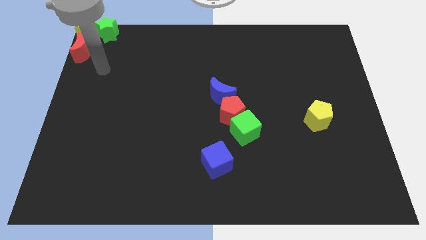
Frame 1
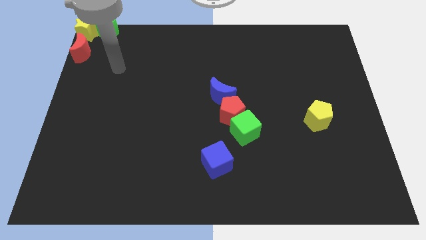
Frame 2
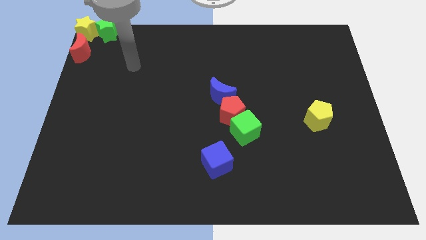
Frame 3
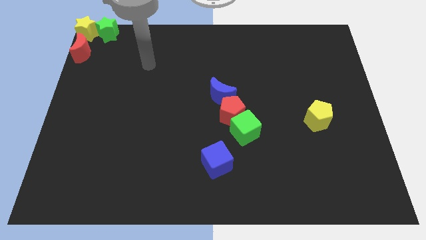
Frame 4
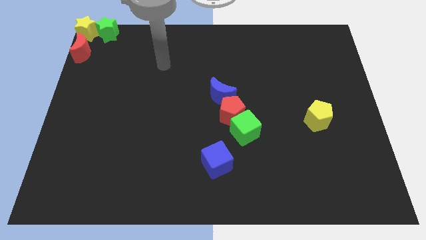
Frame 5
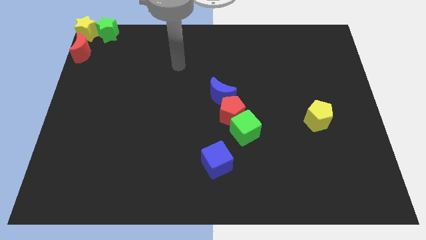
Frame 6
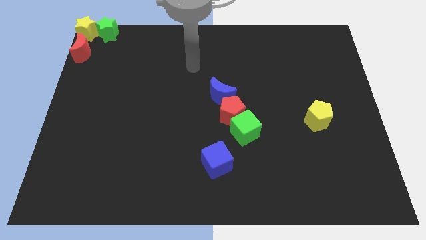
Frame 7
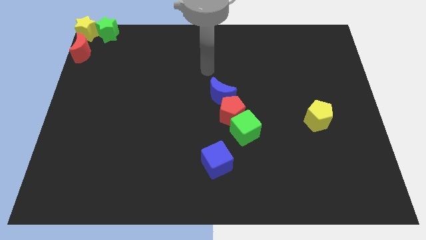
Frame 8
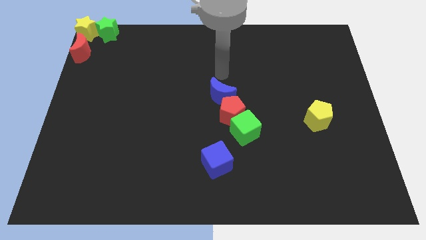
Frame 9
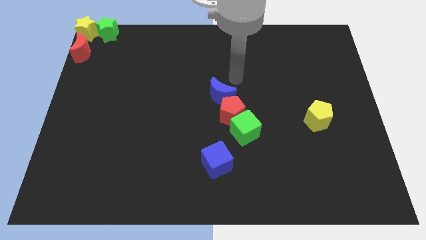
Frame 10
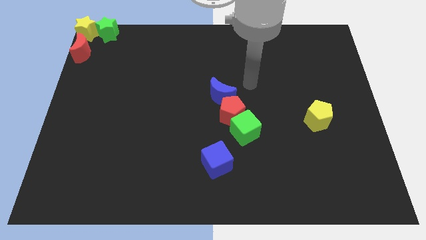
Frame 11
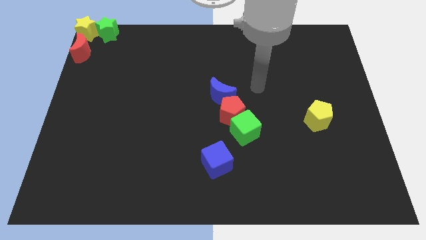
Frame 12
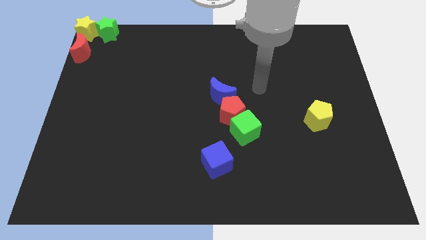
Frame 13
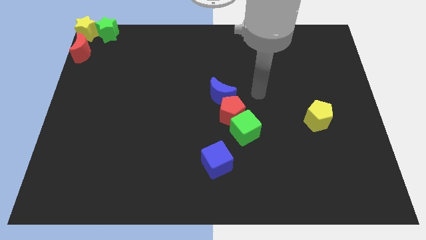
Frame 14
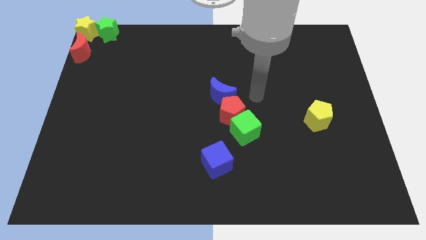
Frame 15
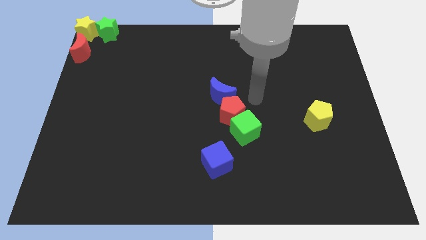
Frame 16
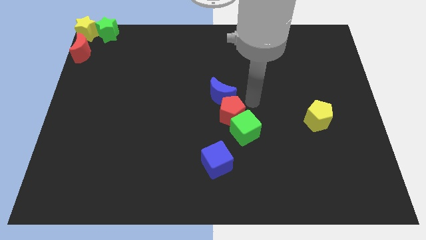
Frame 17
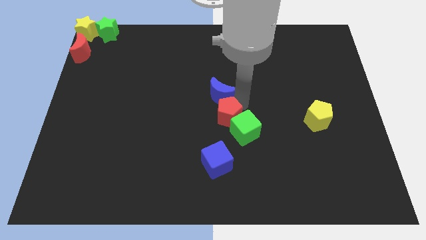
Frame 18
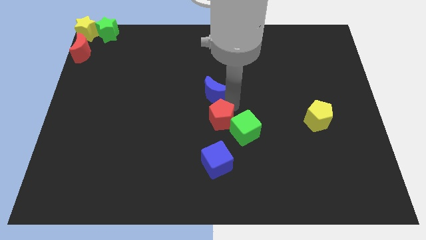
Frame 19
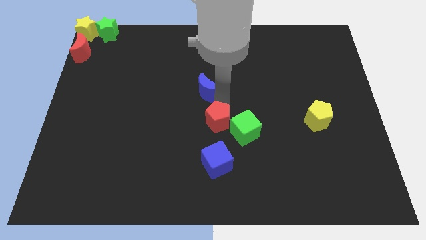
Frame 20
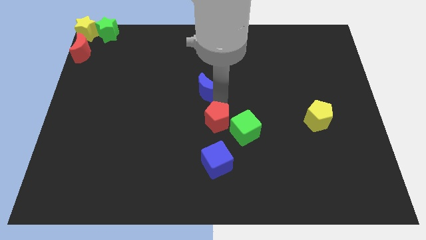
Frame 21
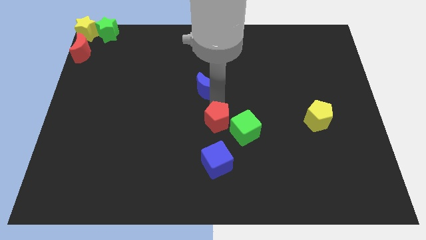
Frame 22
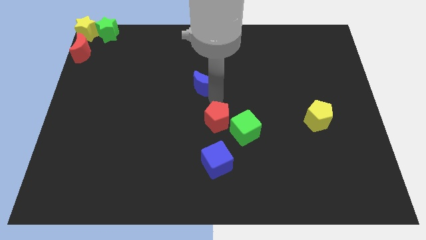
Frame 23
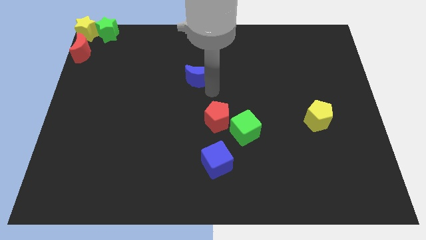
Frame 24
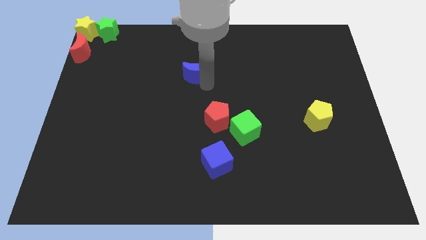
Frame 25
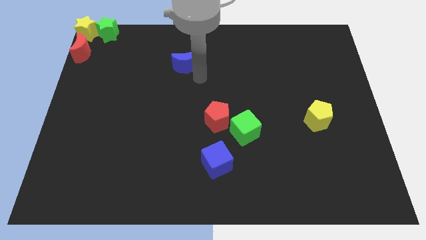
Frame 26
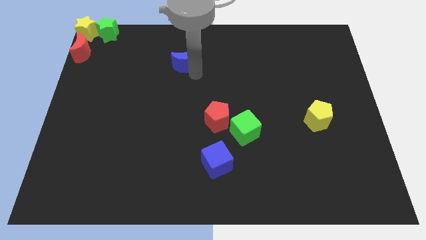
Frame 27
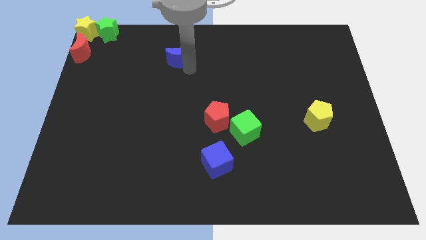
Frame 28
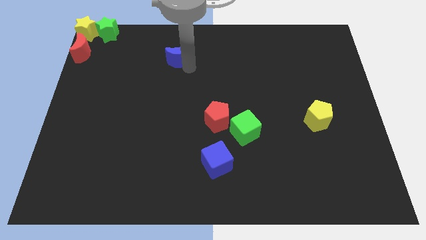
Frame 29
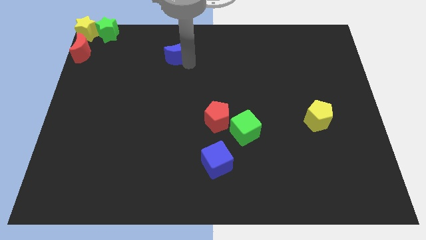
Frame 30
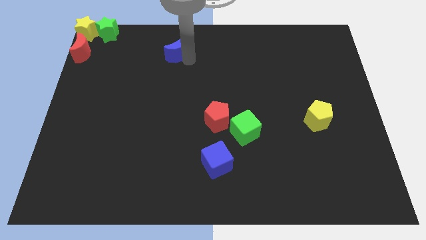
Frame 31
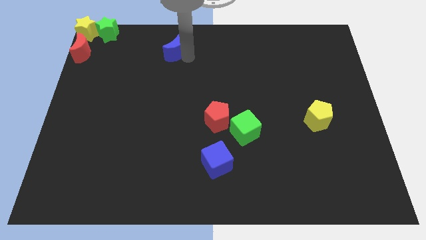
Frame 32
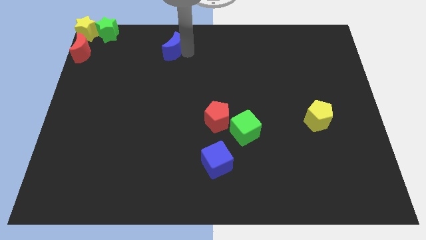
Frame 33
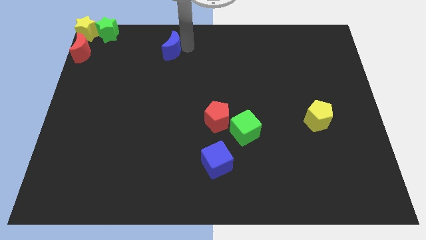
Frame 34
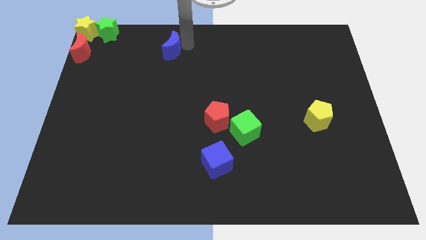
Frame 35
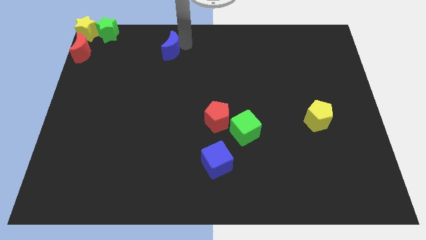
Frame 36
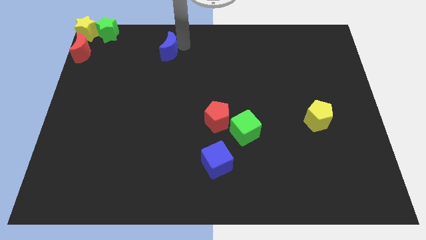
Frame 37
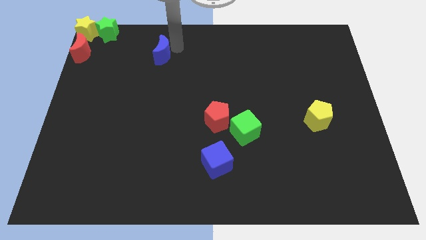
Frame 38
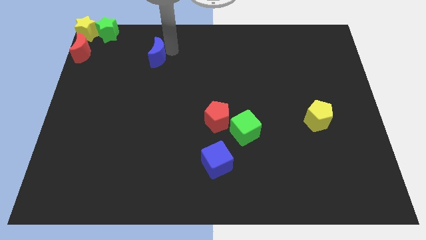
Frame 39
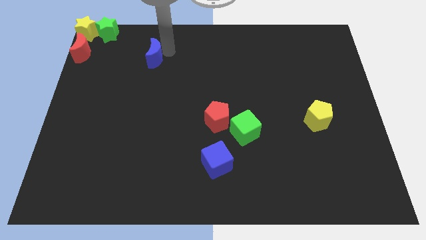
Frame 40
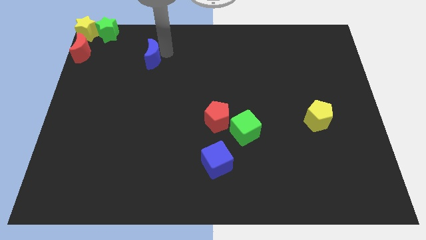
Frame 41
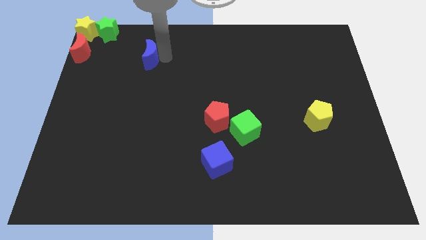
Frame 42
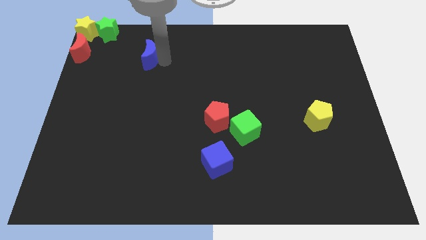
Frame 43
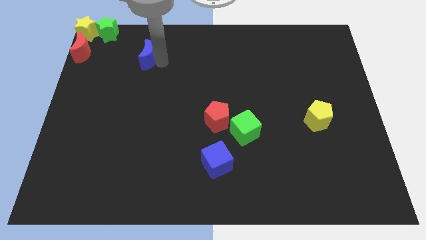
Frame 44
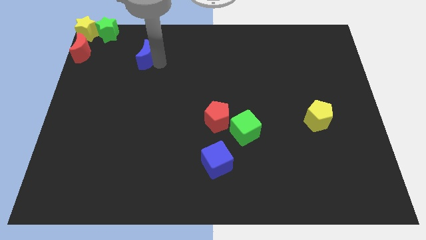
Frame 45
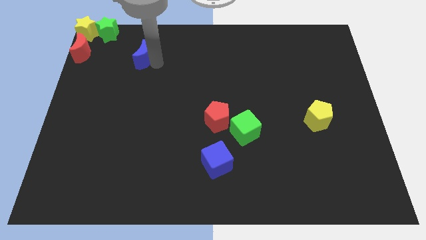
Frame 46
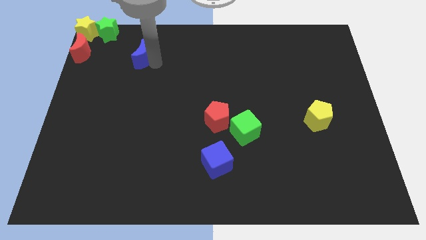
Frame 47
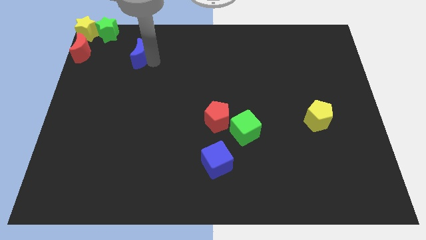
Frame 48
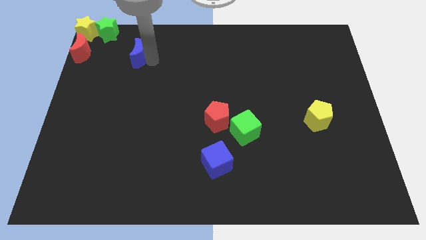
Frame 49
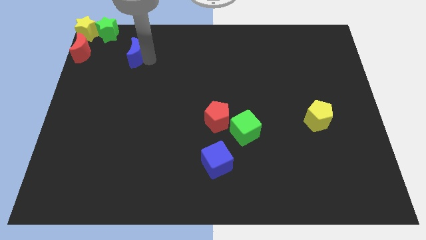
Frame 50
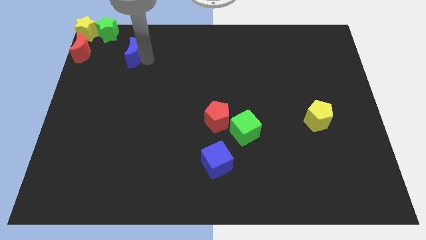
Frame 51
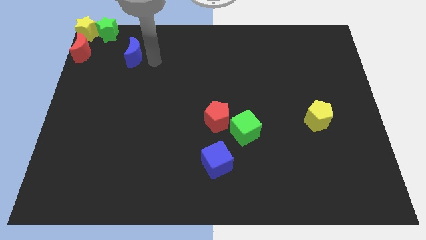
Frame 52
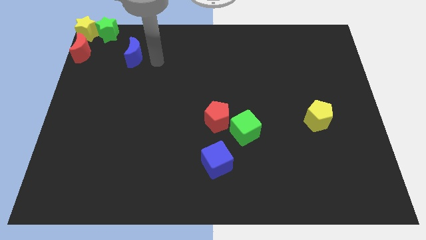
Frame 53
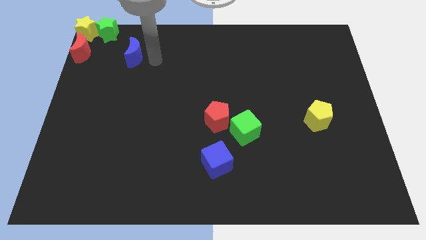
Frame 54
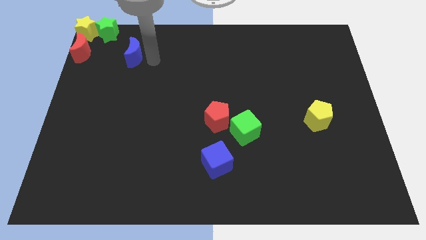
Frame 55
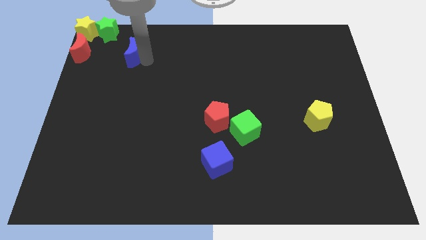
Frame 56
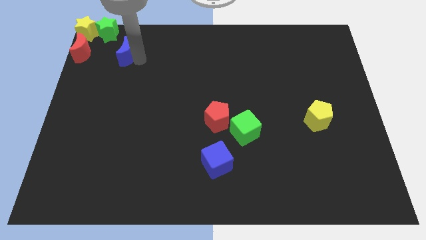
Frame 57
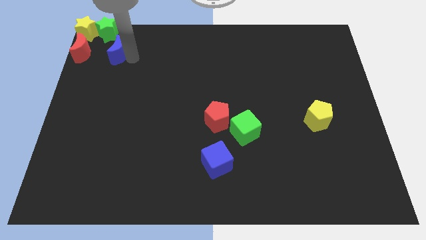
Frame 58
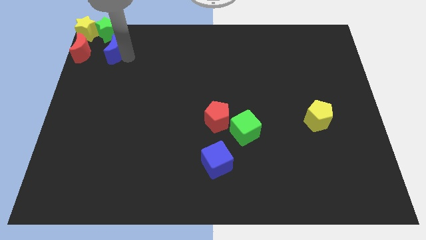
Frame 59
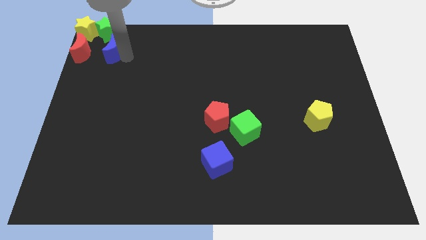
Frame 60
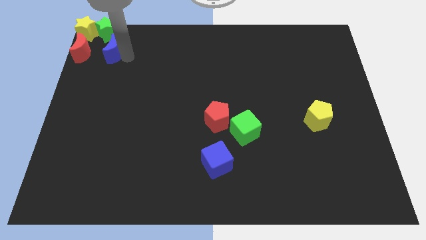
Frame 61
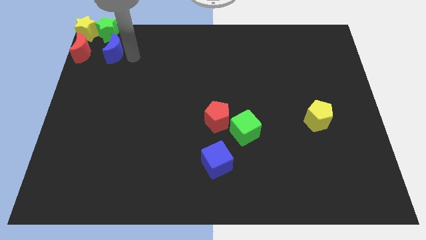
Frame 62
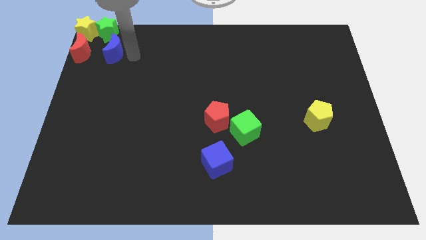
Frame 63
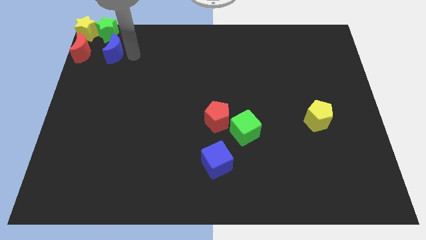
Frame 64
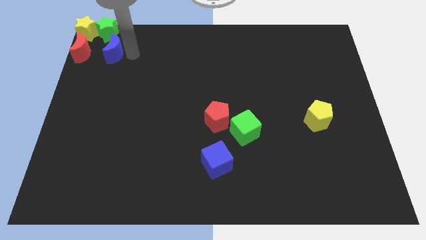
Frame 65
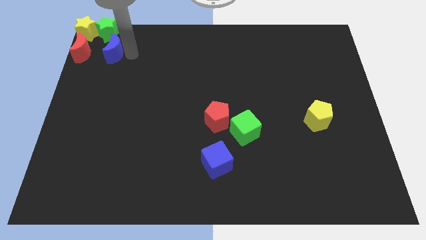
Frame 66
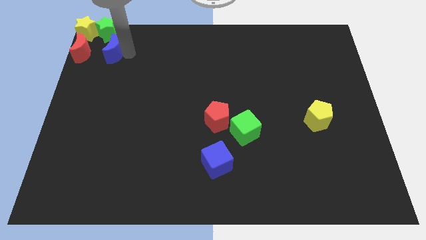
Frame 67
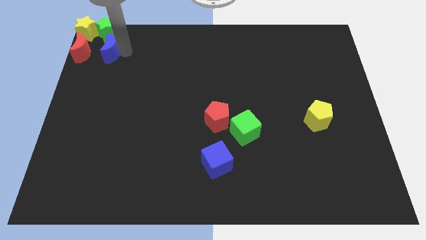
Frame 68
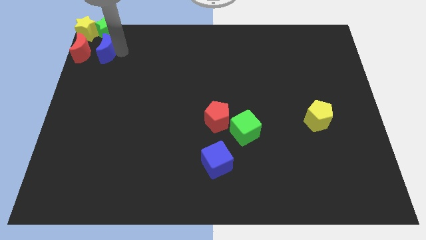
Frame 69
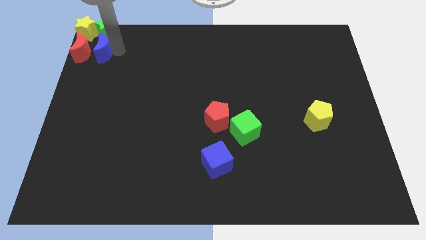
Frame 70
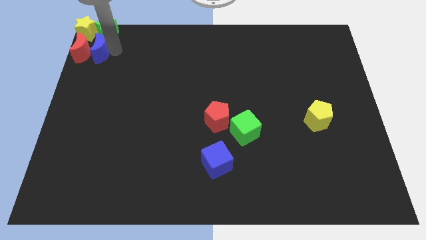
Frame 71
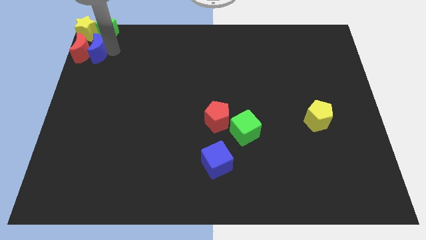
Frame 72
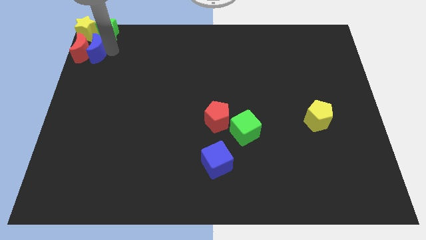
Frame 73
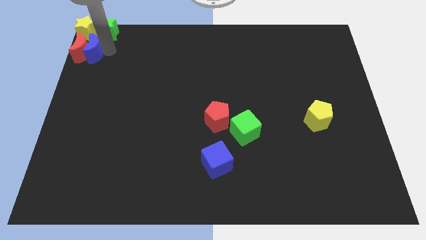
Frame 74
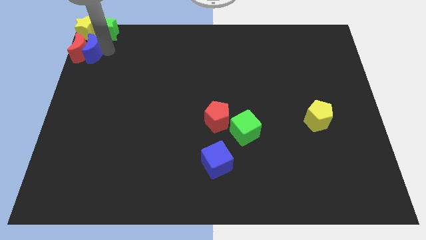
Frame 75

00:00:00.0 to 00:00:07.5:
slide the blue moon into the right side of the red crescent

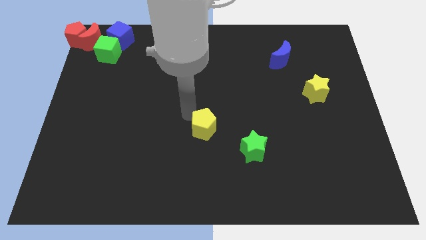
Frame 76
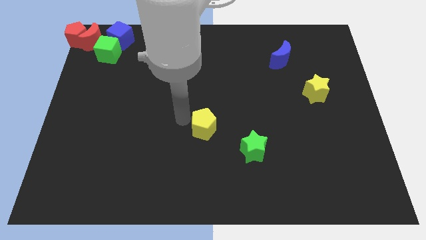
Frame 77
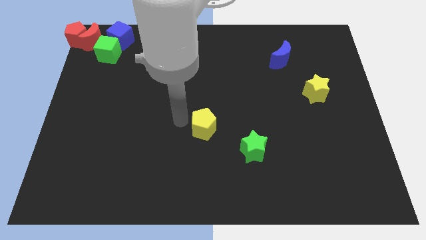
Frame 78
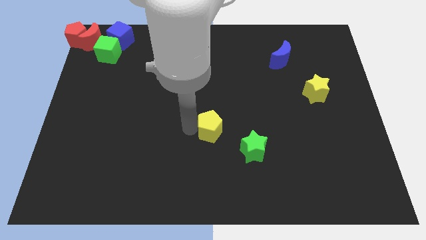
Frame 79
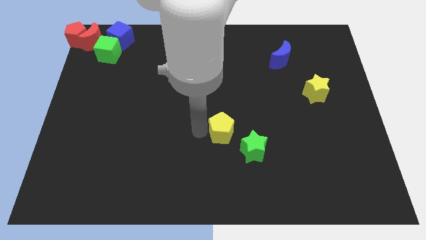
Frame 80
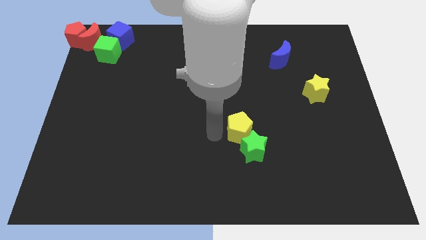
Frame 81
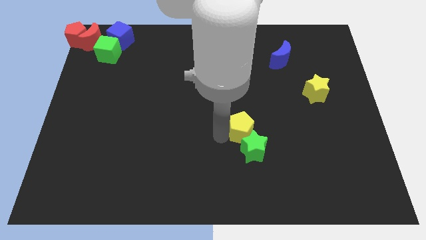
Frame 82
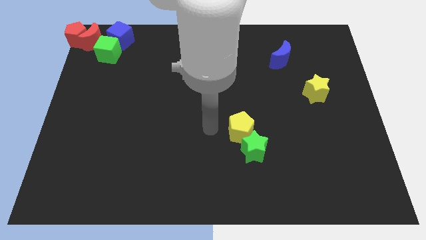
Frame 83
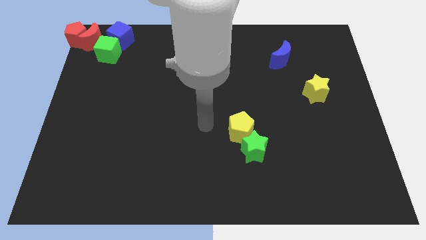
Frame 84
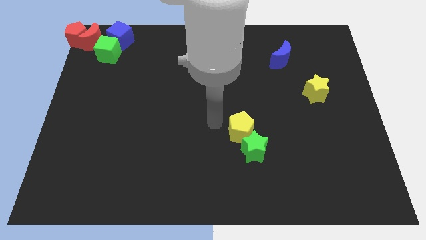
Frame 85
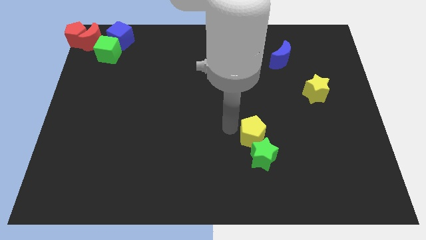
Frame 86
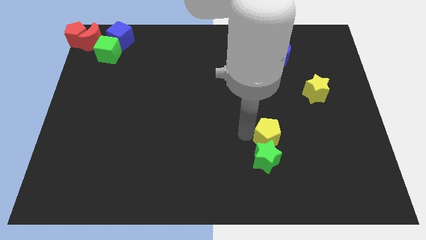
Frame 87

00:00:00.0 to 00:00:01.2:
push yellow pentagon into the green star

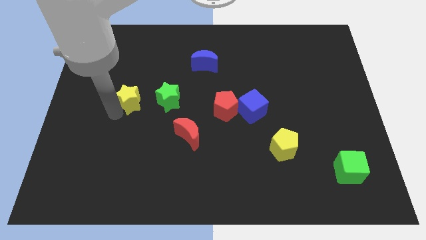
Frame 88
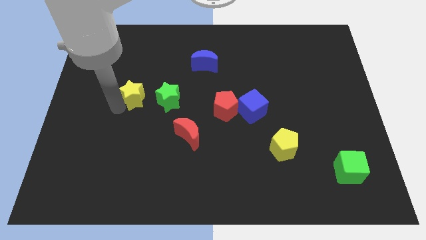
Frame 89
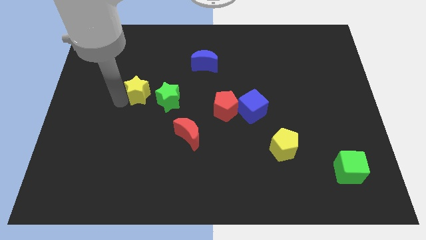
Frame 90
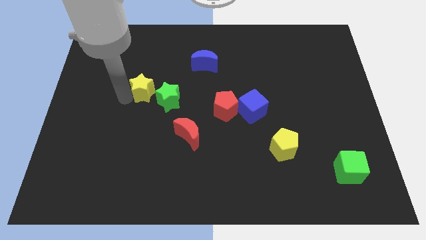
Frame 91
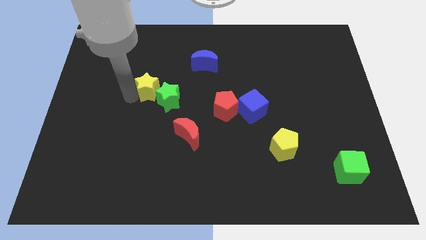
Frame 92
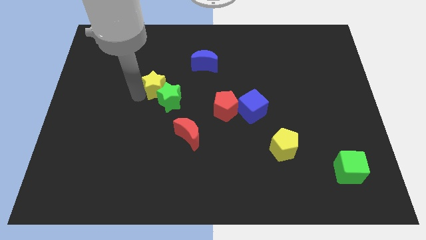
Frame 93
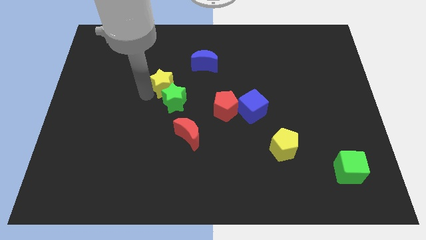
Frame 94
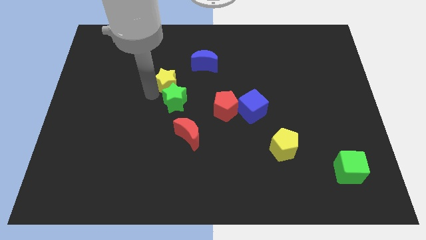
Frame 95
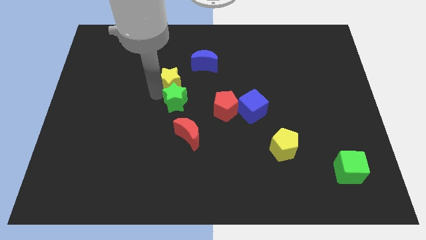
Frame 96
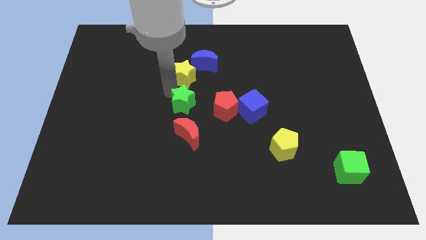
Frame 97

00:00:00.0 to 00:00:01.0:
push the green star into the yellow star
